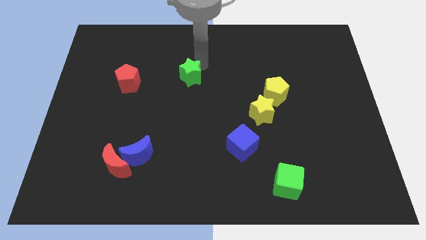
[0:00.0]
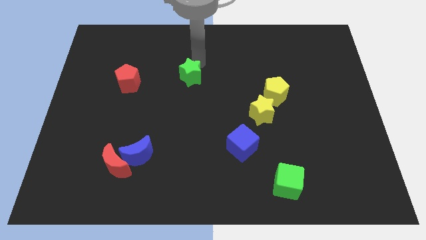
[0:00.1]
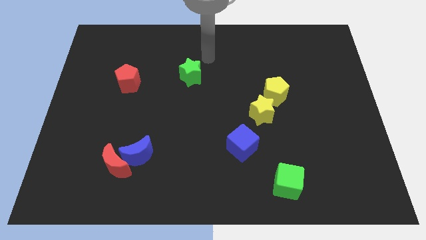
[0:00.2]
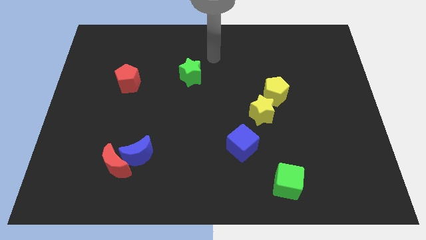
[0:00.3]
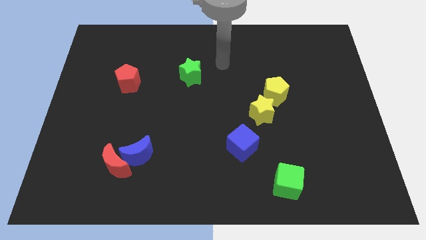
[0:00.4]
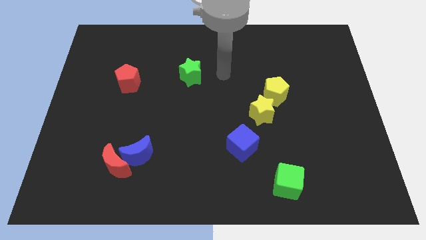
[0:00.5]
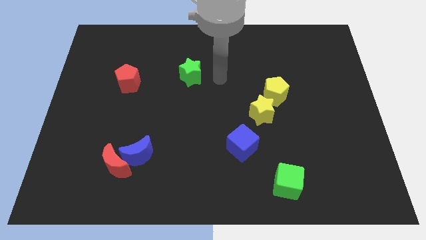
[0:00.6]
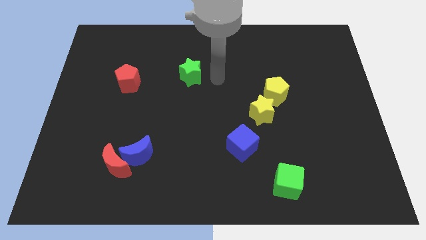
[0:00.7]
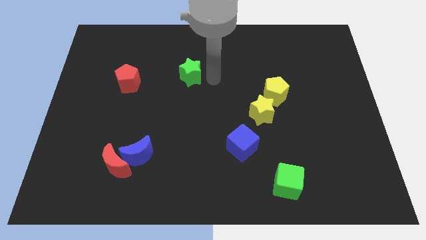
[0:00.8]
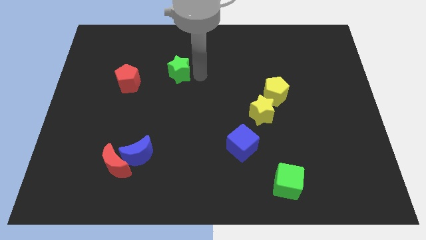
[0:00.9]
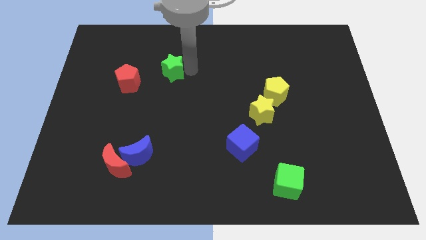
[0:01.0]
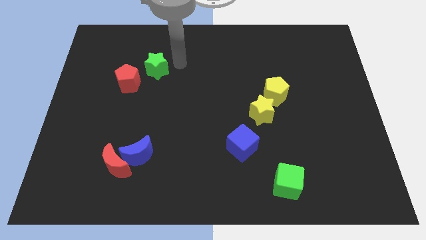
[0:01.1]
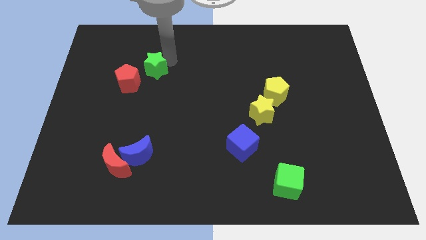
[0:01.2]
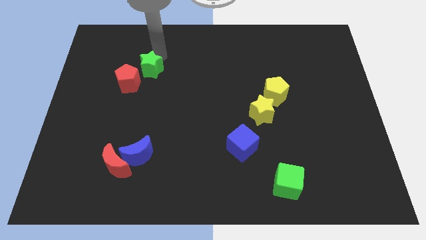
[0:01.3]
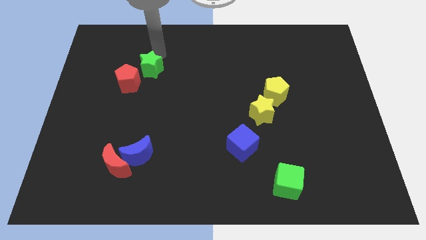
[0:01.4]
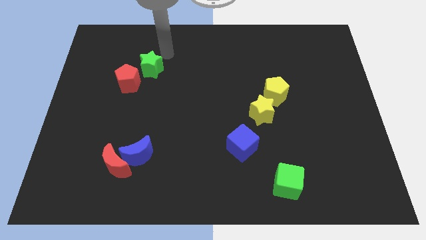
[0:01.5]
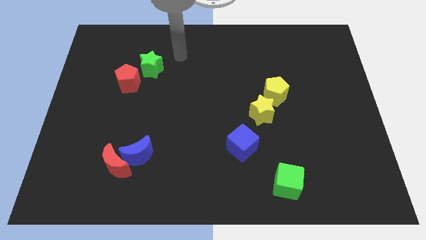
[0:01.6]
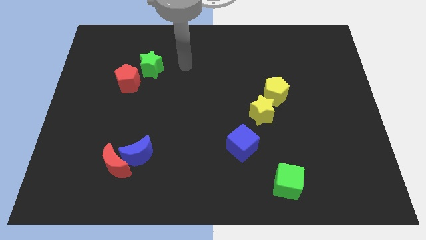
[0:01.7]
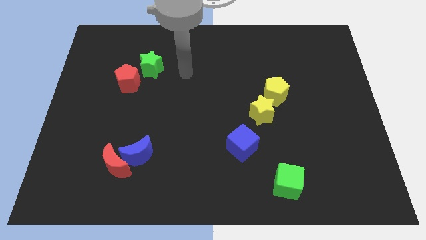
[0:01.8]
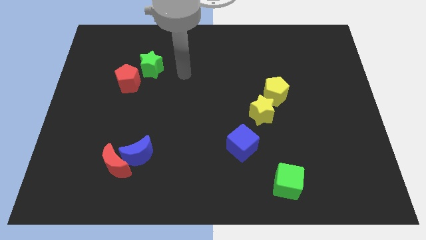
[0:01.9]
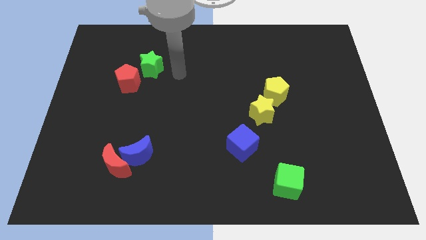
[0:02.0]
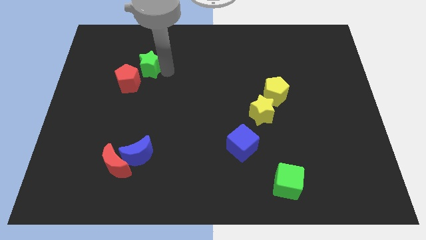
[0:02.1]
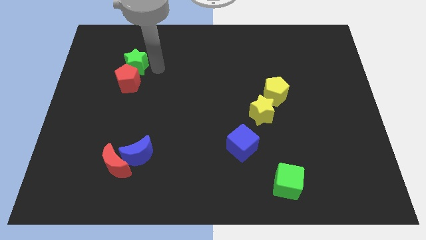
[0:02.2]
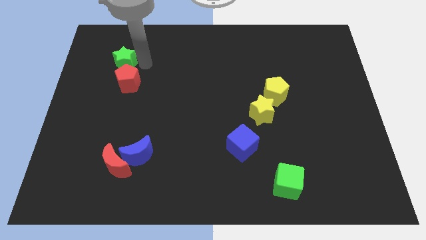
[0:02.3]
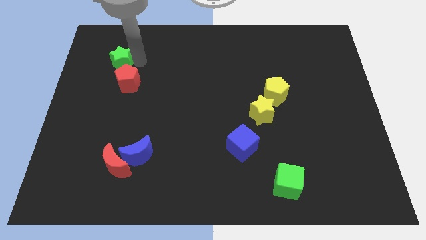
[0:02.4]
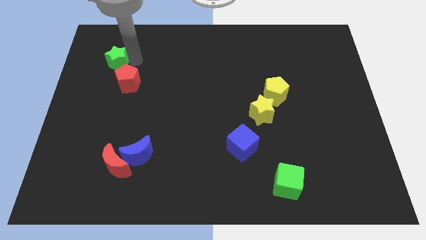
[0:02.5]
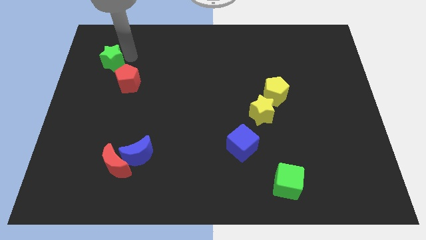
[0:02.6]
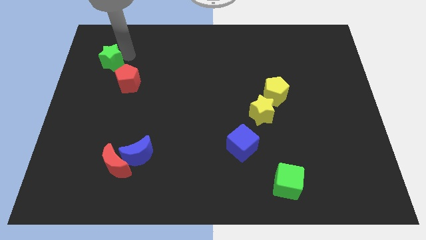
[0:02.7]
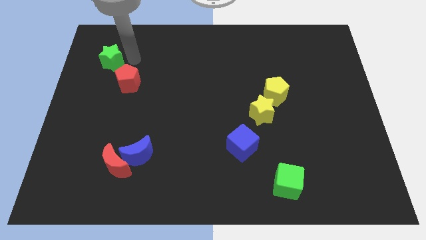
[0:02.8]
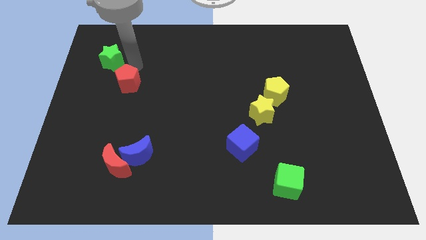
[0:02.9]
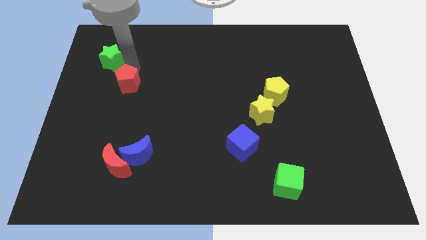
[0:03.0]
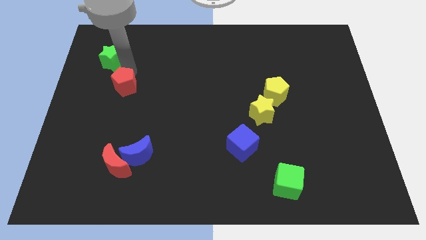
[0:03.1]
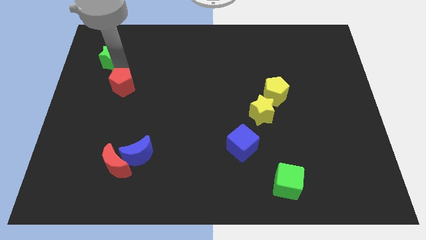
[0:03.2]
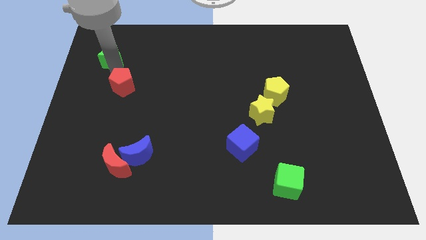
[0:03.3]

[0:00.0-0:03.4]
place the green star at the top left side of red pentagon

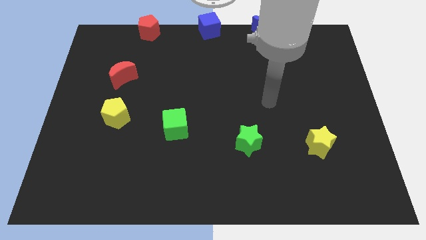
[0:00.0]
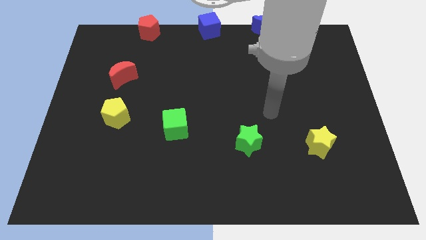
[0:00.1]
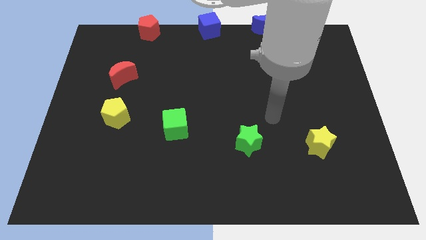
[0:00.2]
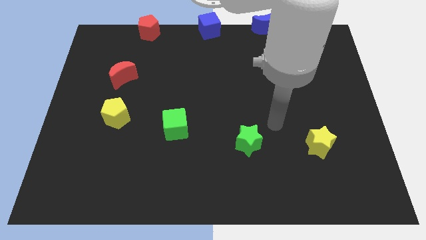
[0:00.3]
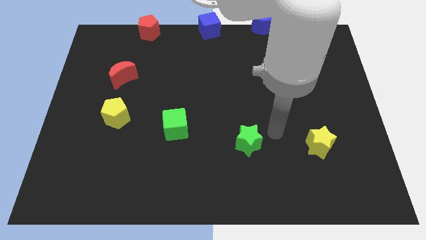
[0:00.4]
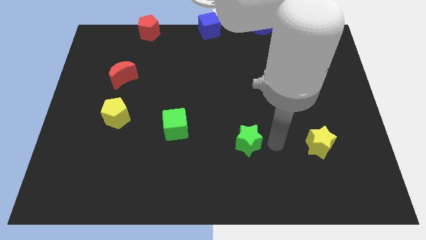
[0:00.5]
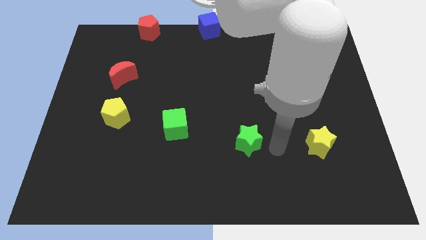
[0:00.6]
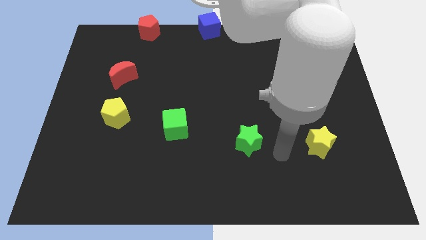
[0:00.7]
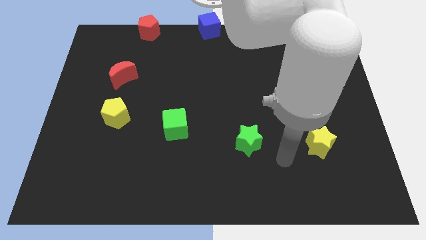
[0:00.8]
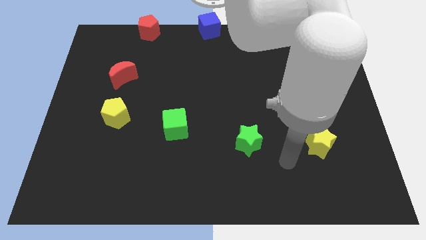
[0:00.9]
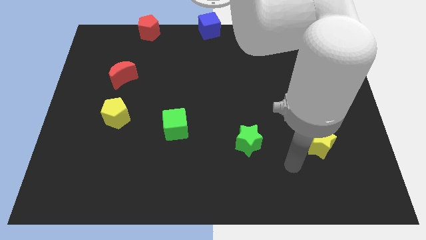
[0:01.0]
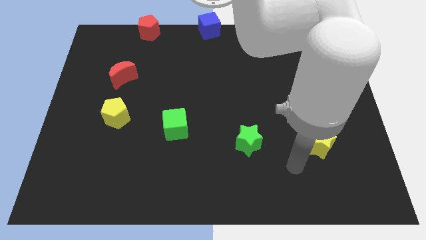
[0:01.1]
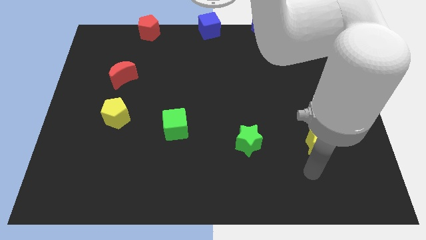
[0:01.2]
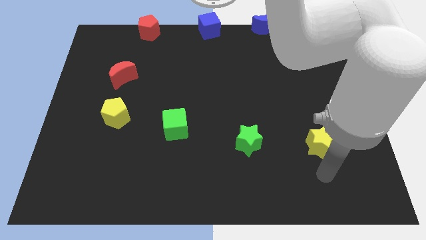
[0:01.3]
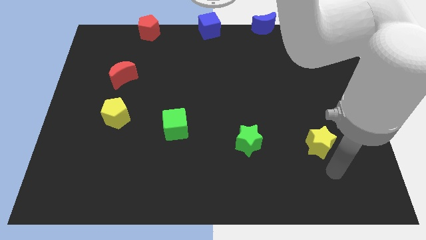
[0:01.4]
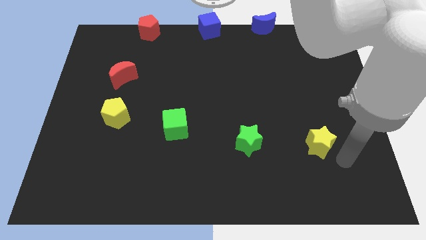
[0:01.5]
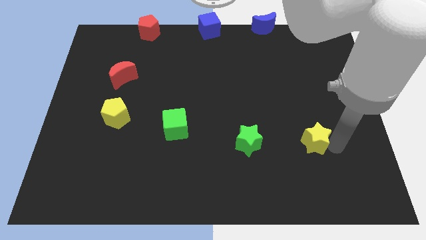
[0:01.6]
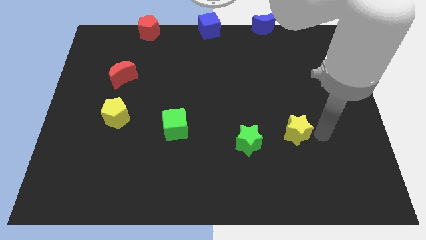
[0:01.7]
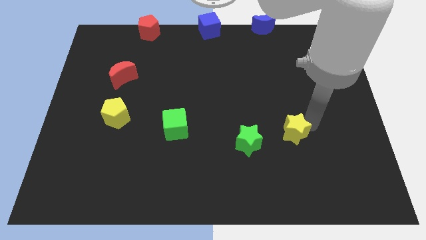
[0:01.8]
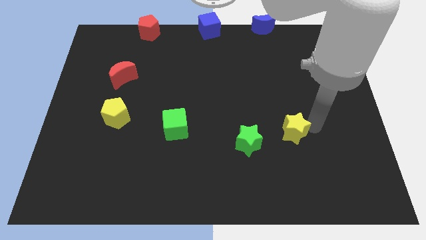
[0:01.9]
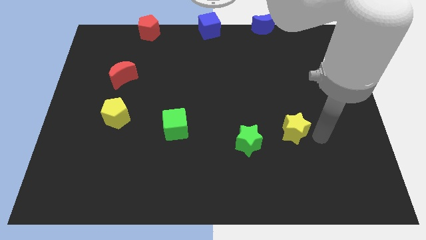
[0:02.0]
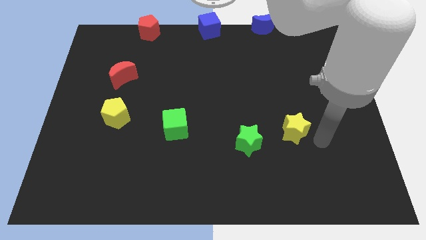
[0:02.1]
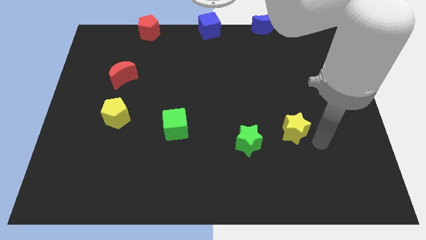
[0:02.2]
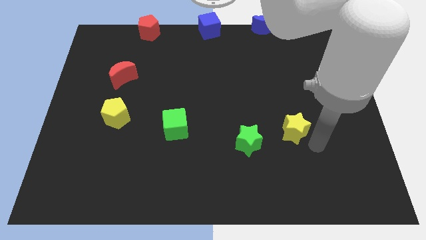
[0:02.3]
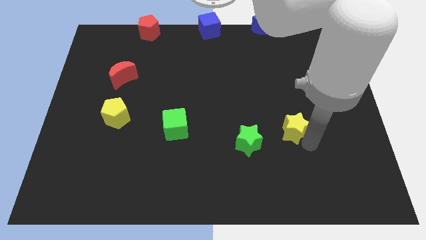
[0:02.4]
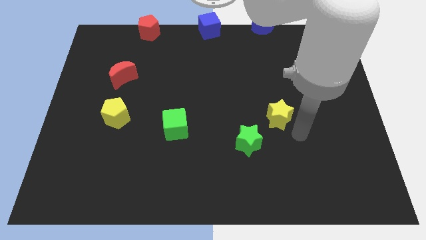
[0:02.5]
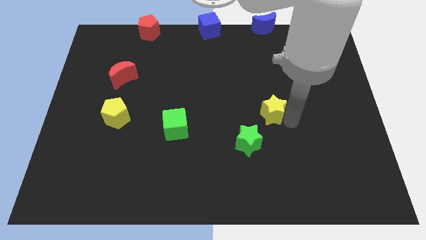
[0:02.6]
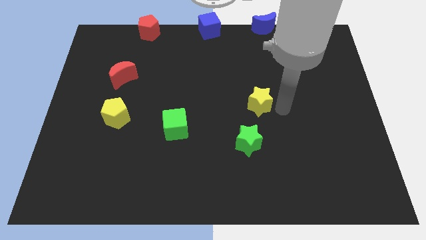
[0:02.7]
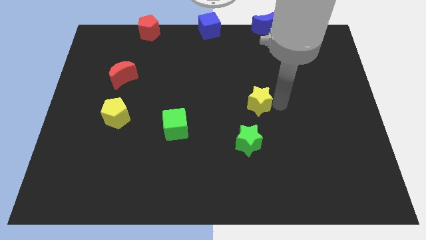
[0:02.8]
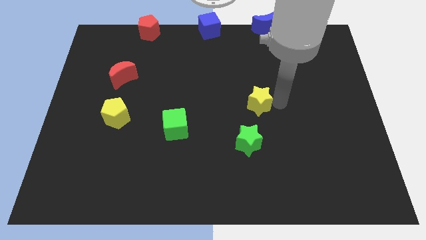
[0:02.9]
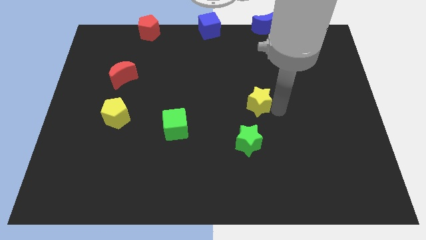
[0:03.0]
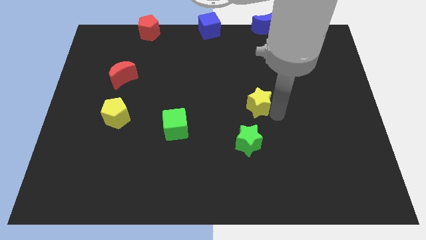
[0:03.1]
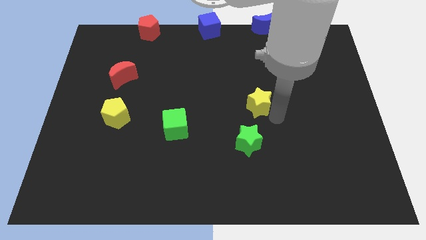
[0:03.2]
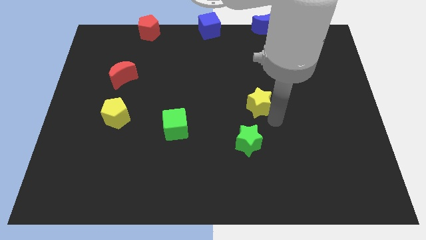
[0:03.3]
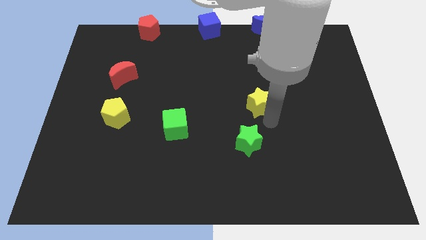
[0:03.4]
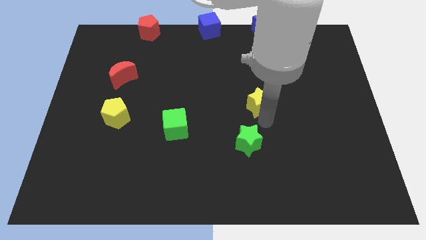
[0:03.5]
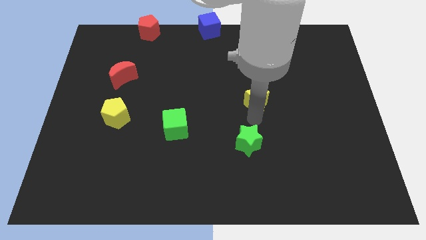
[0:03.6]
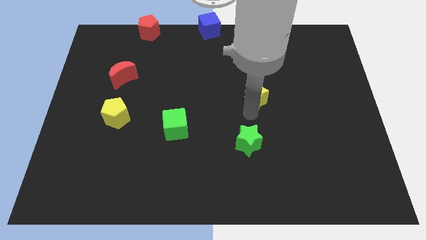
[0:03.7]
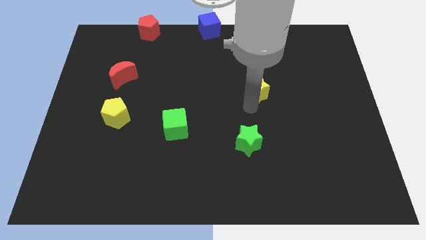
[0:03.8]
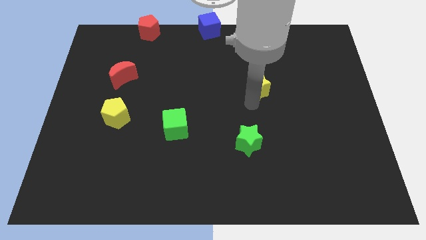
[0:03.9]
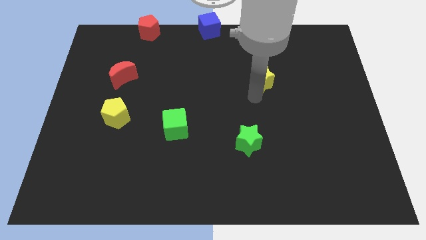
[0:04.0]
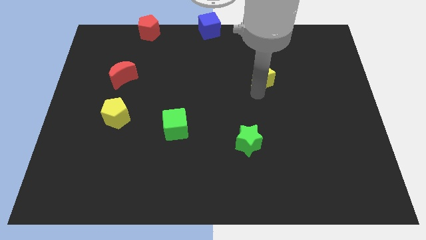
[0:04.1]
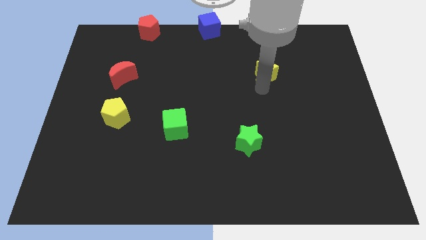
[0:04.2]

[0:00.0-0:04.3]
move the yellow star on top green star

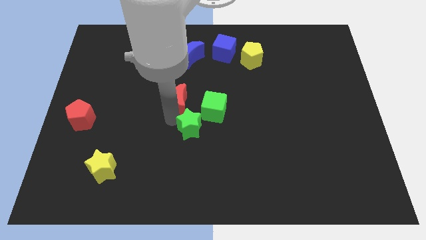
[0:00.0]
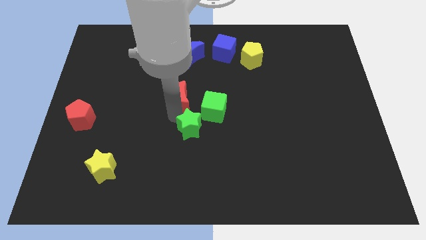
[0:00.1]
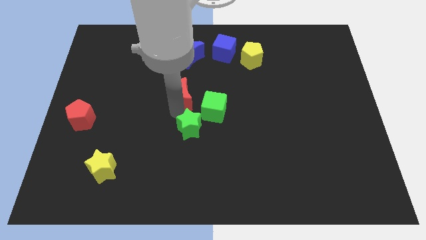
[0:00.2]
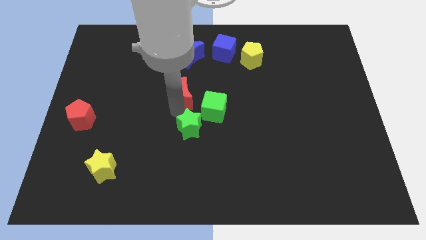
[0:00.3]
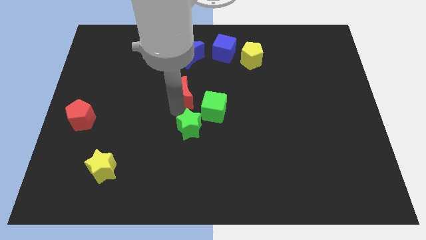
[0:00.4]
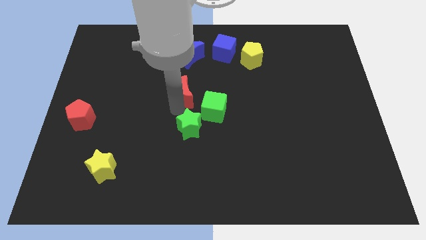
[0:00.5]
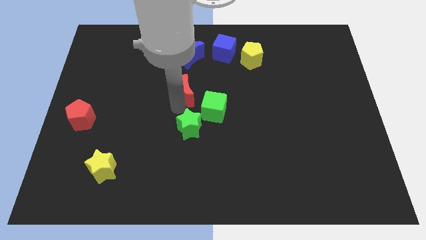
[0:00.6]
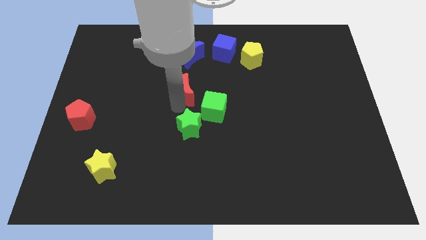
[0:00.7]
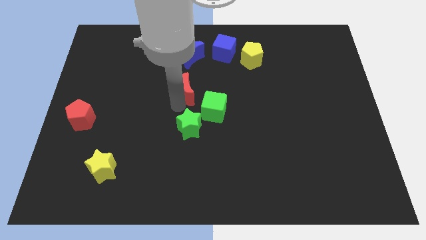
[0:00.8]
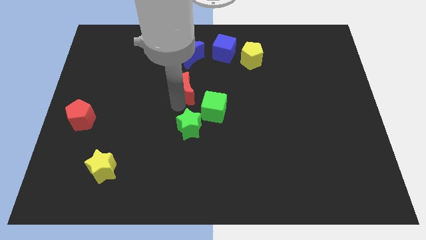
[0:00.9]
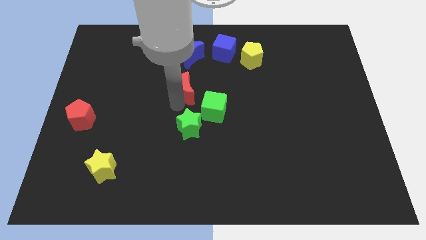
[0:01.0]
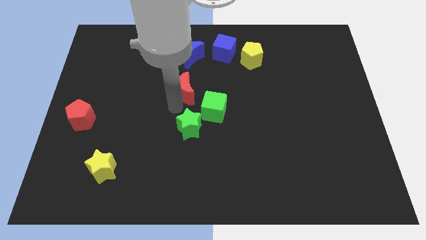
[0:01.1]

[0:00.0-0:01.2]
push the red crescent slightly above

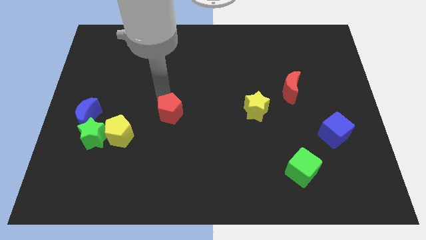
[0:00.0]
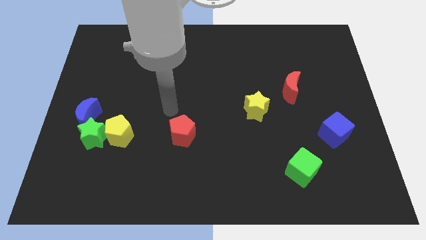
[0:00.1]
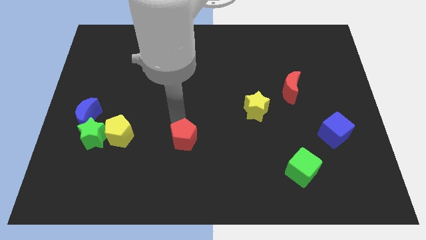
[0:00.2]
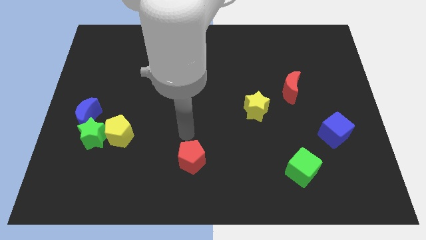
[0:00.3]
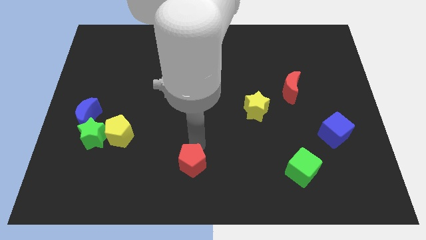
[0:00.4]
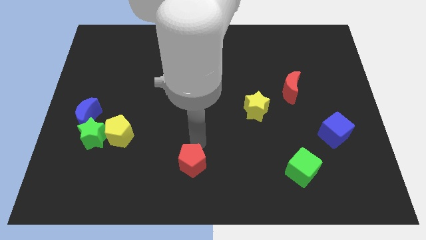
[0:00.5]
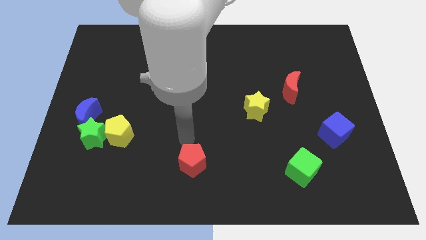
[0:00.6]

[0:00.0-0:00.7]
move the red pentagon to the bottom of the board
